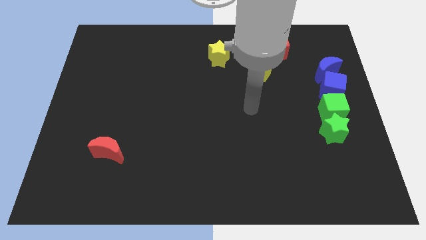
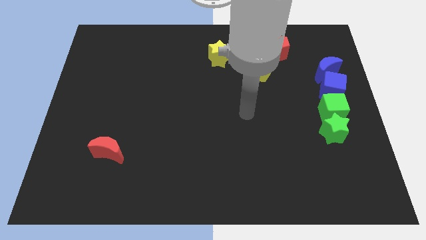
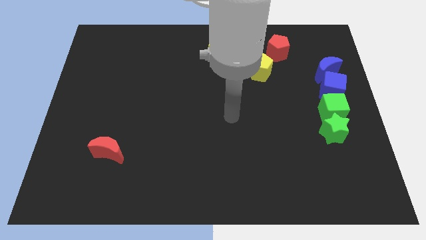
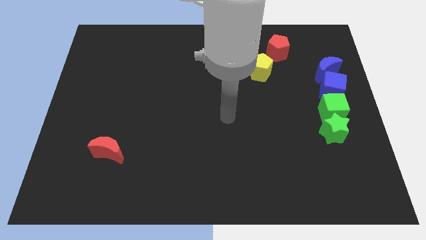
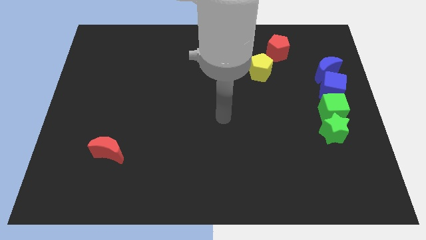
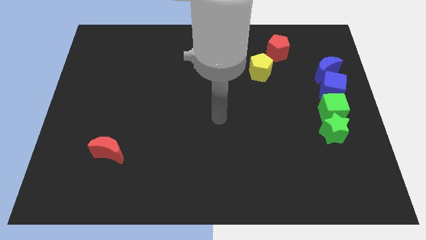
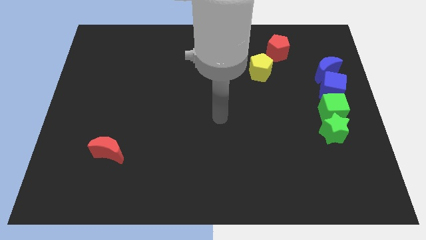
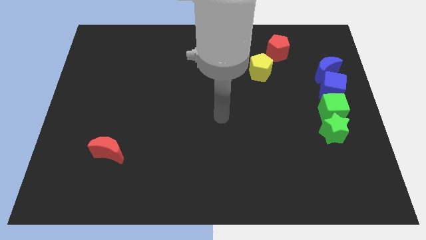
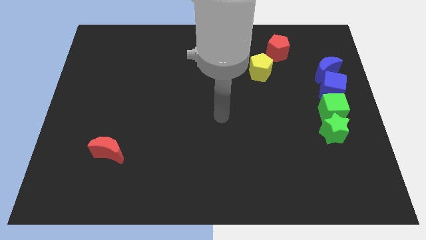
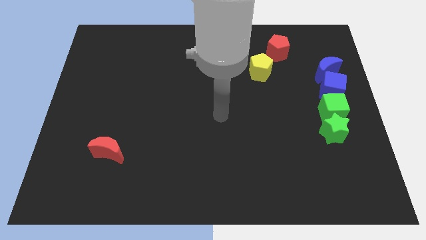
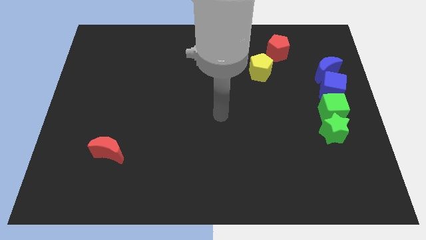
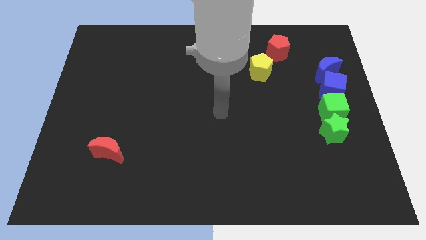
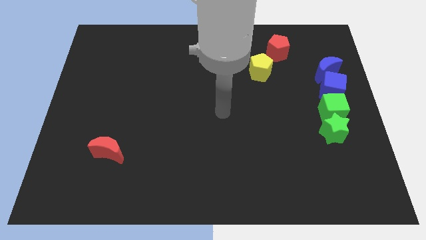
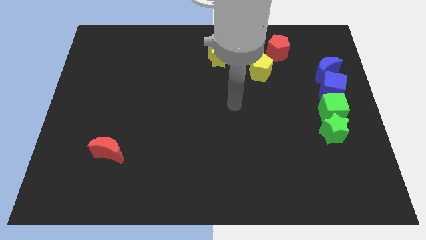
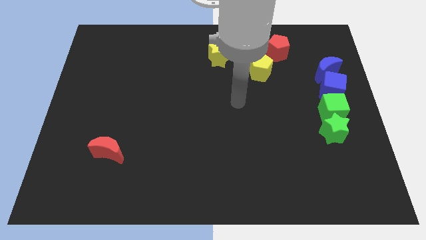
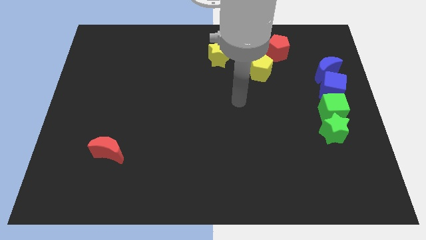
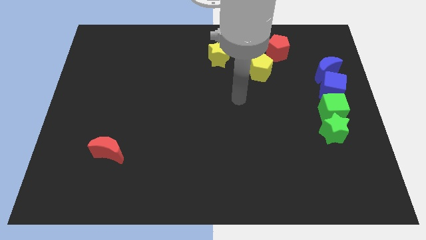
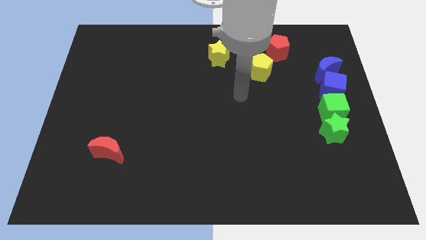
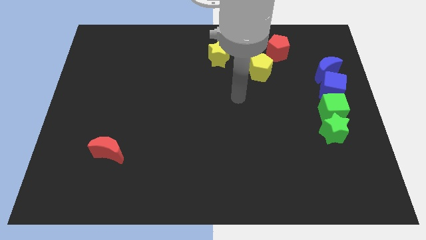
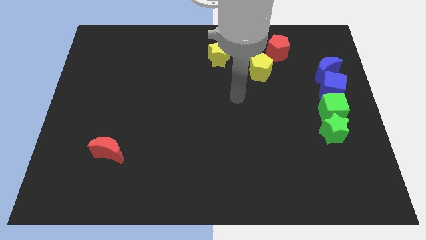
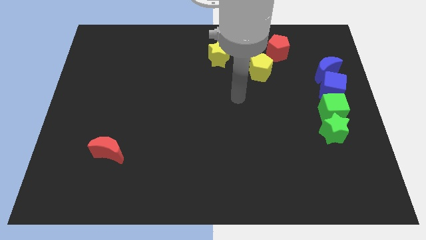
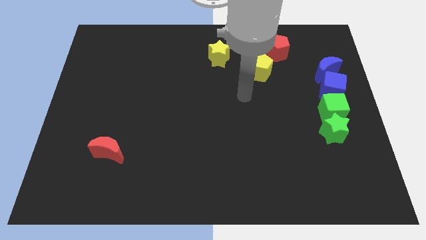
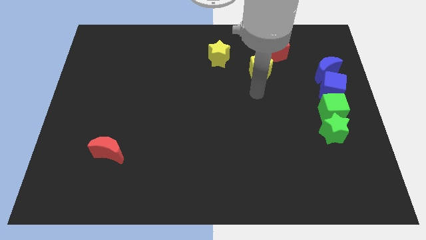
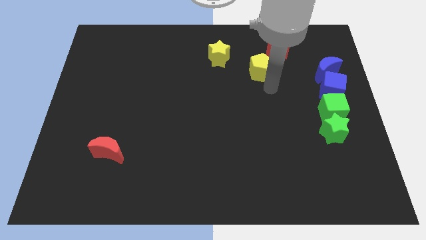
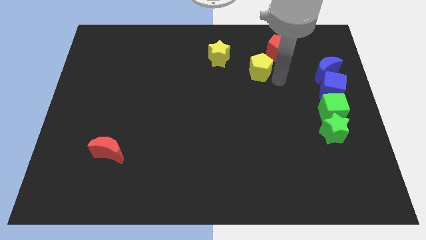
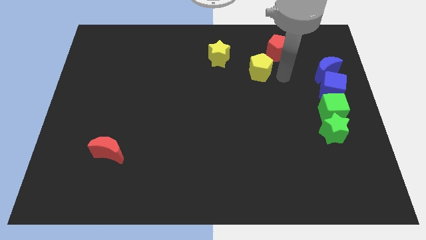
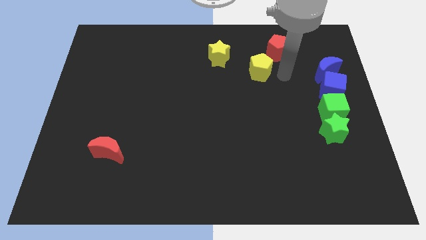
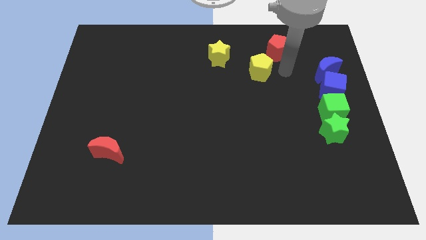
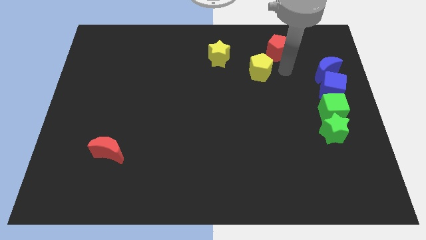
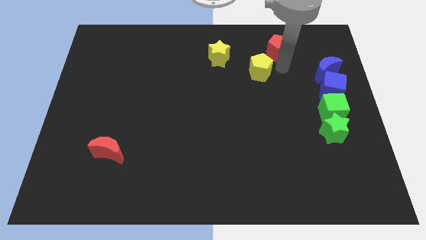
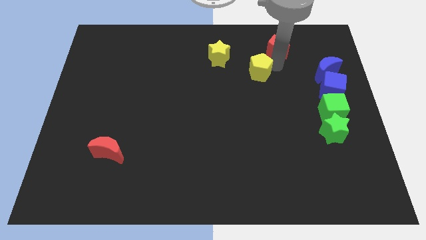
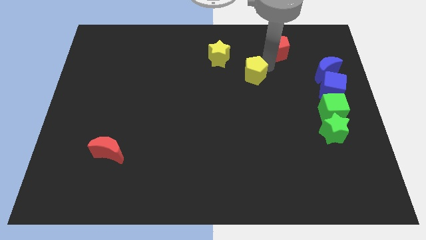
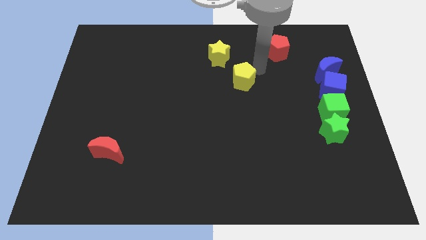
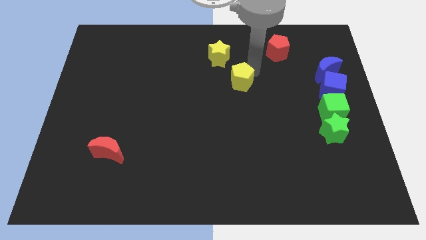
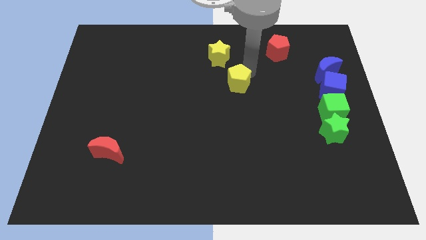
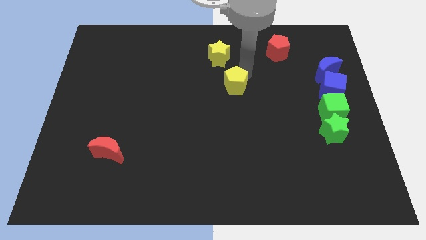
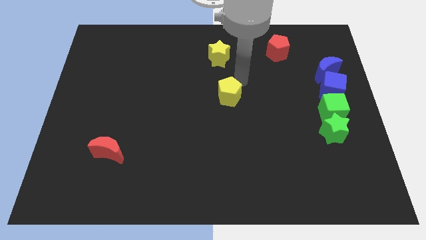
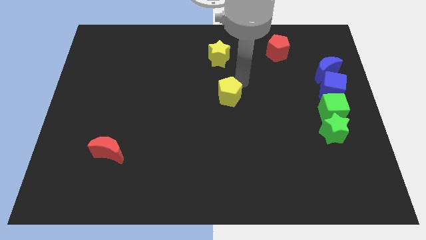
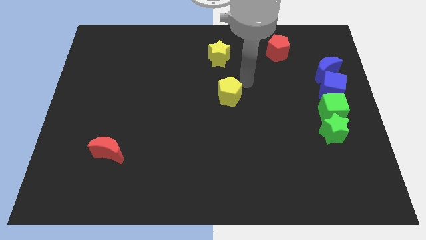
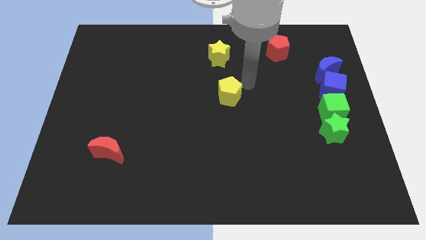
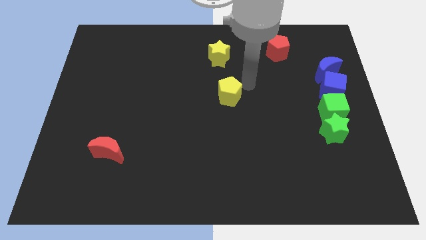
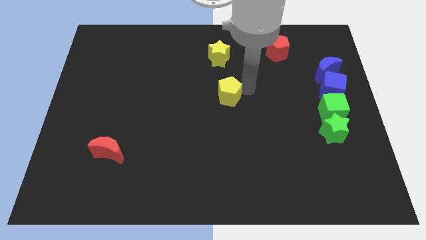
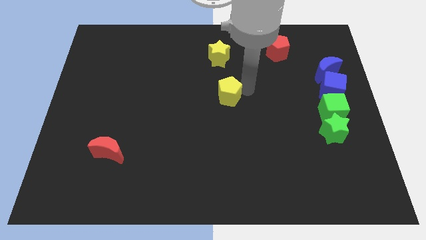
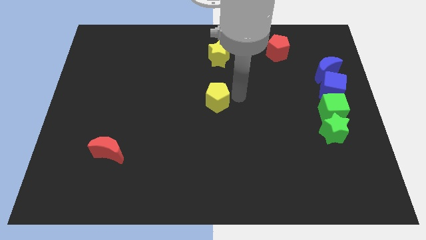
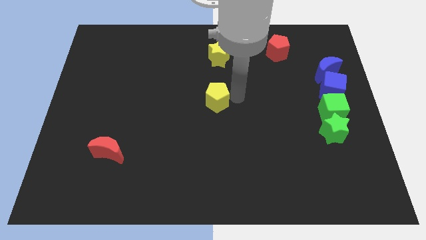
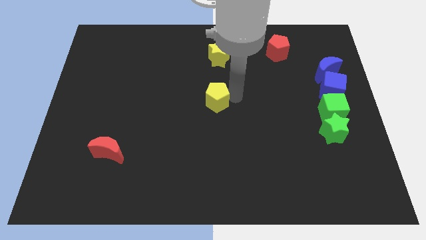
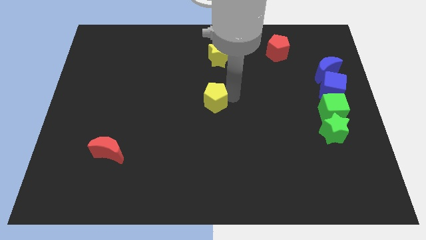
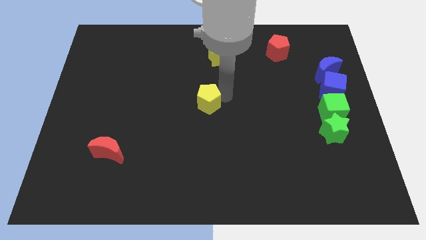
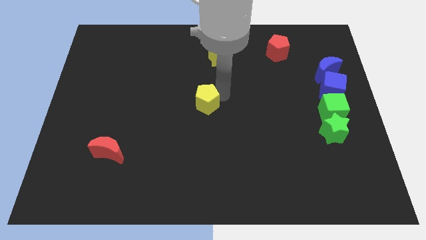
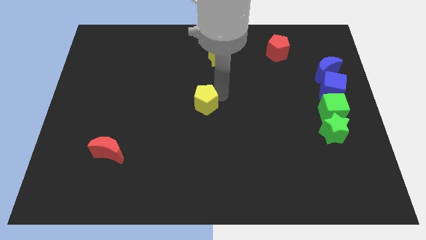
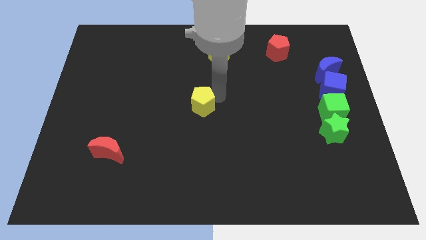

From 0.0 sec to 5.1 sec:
move the yellow pentagon to the center of the board

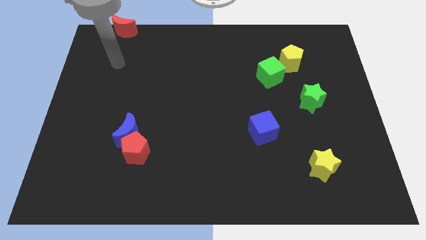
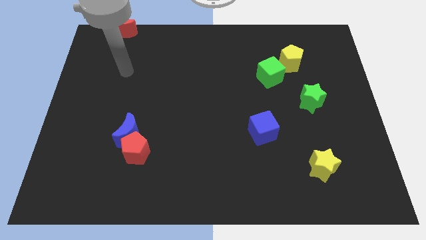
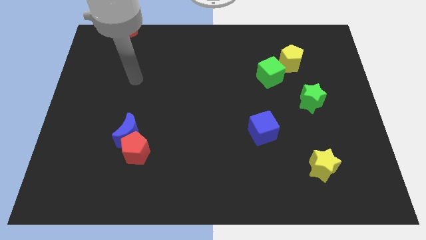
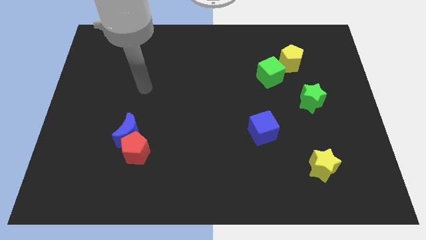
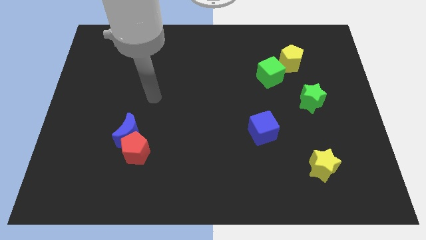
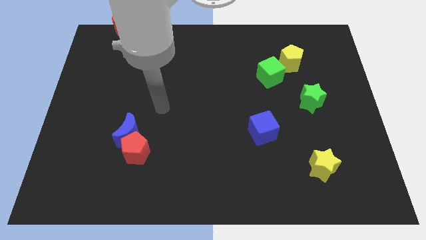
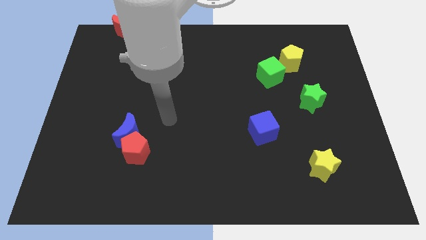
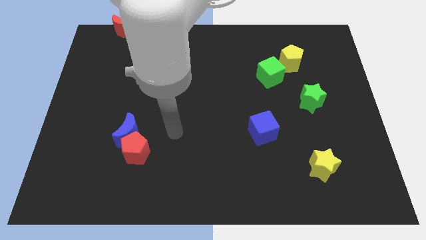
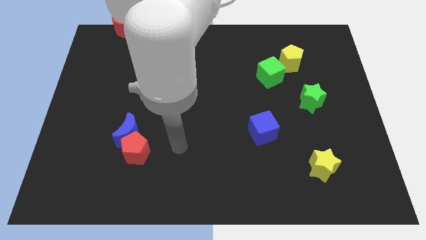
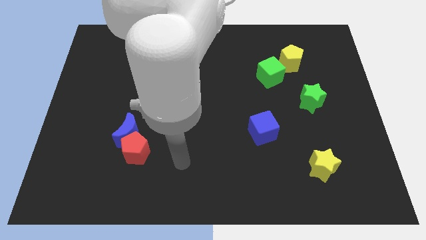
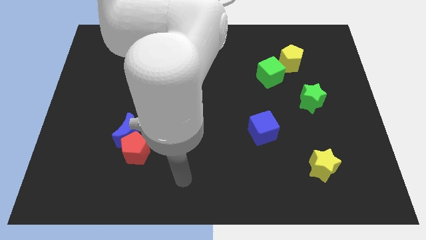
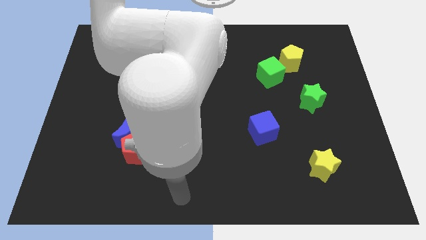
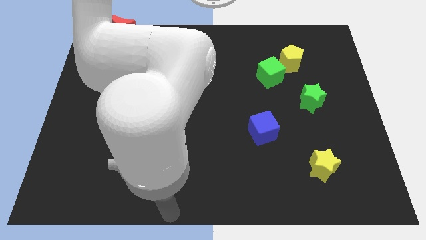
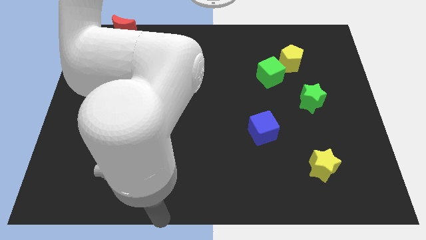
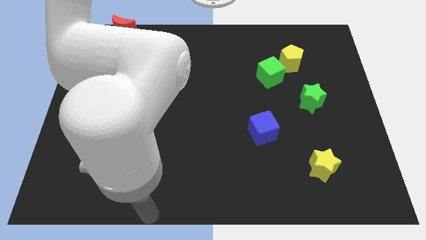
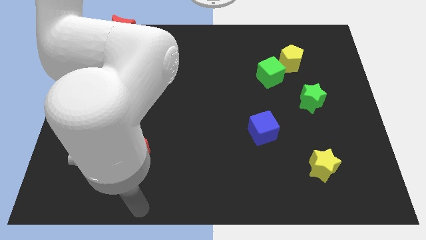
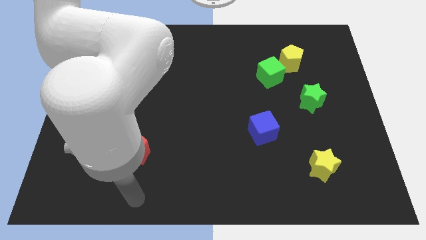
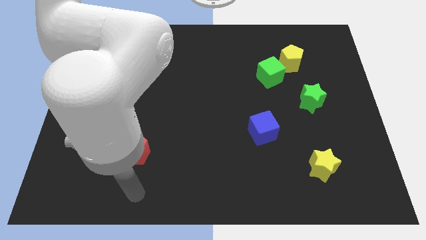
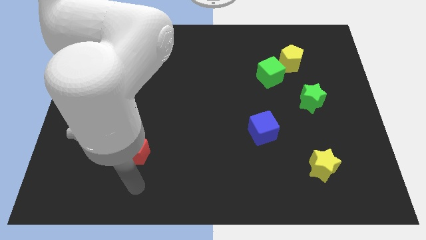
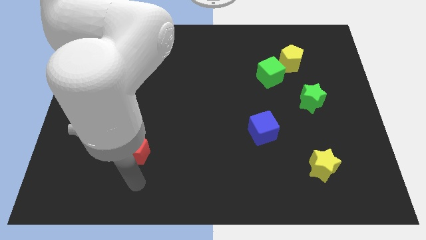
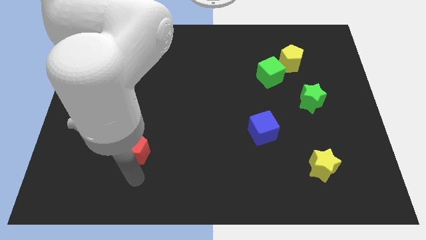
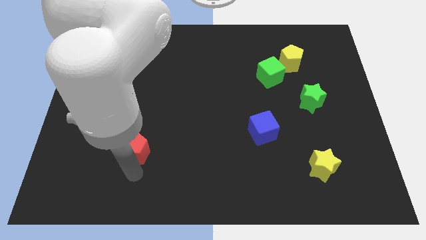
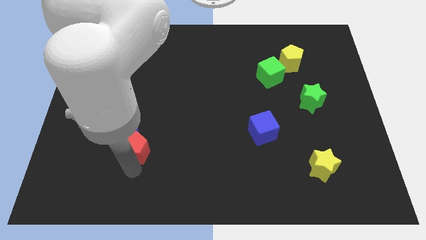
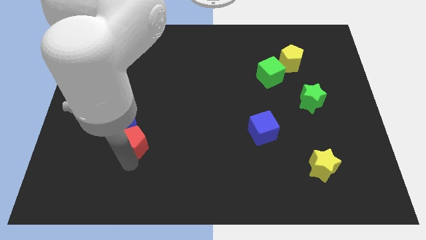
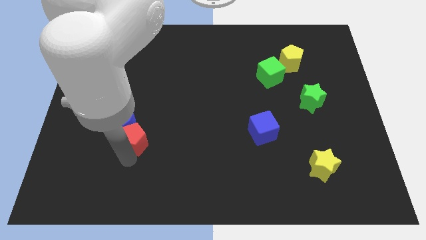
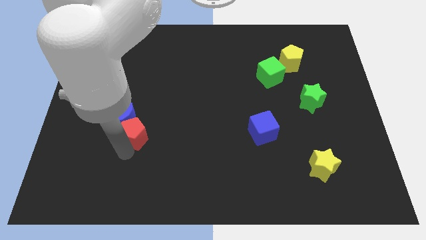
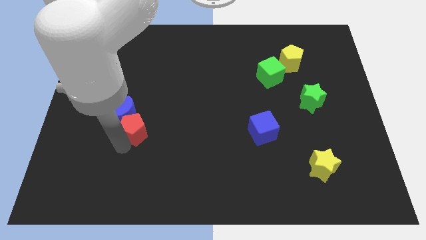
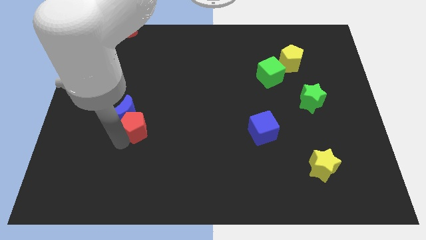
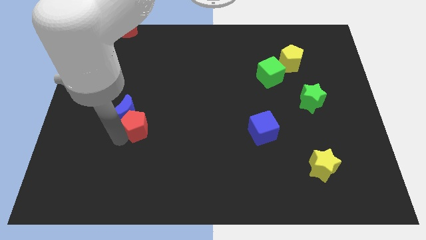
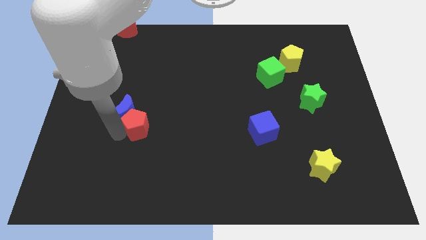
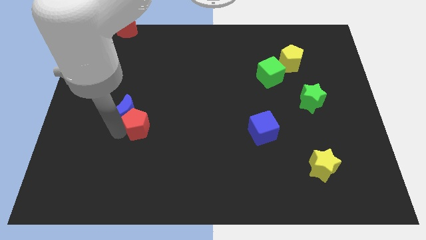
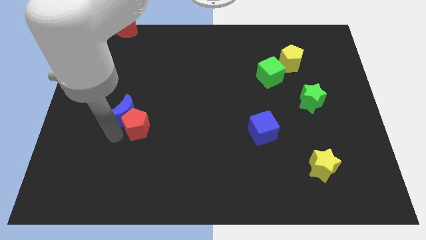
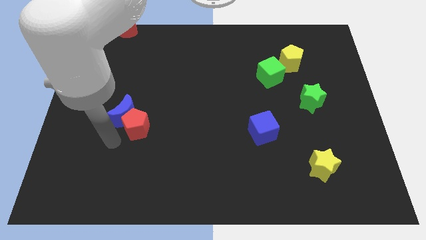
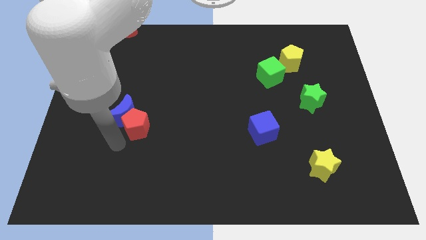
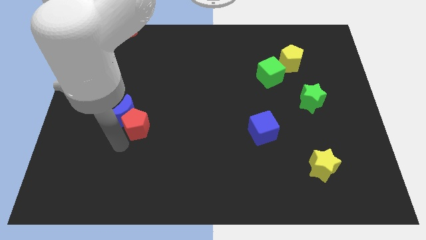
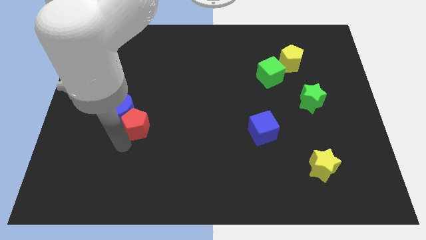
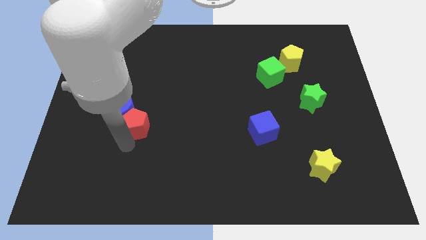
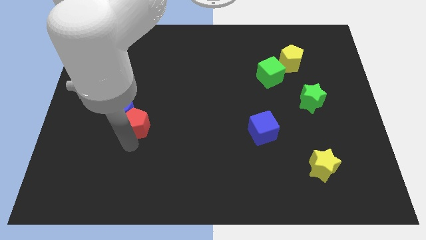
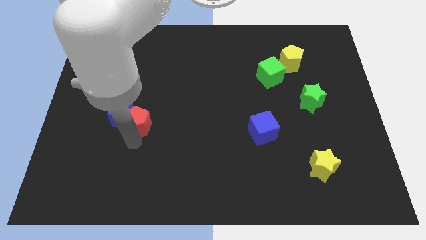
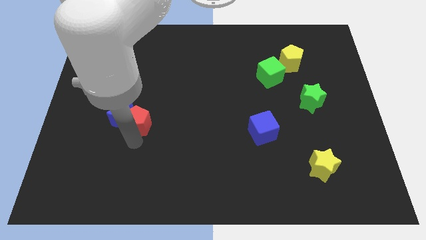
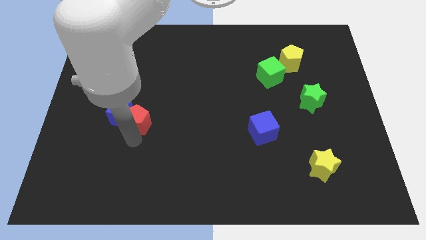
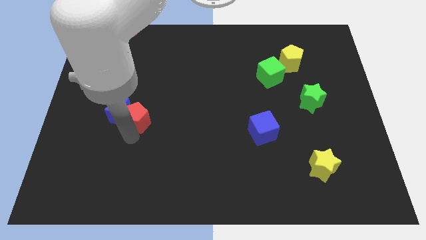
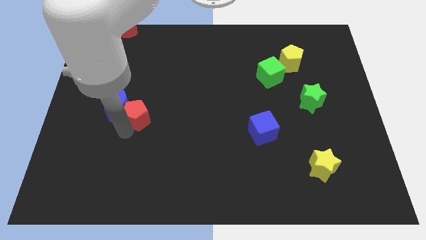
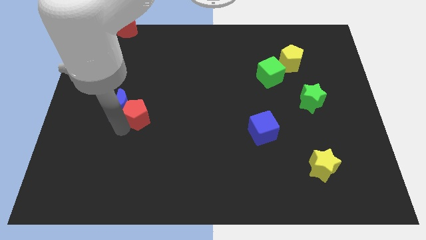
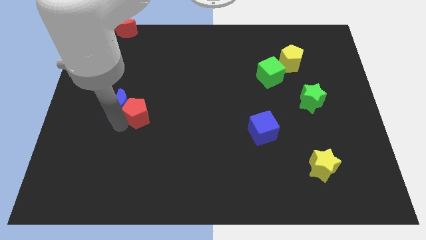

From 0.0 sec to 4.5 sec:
push red pentagon into blue crescent
